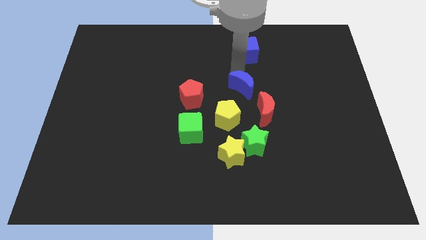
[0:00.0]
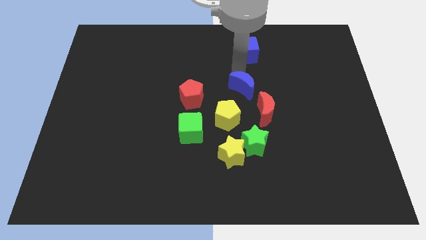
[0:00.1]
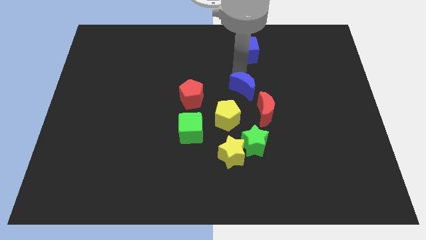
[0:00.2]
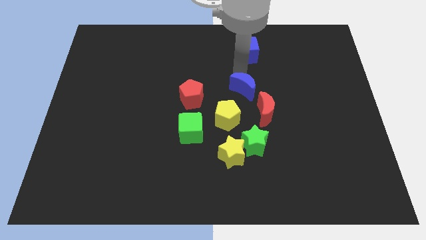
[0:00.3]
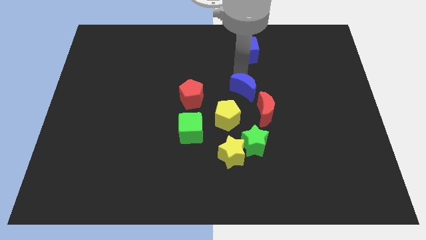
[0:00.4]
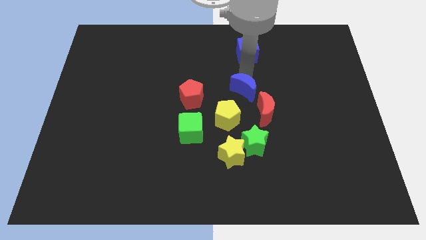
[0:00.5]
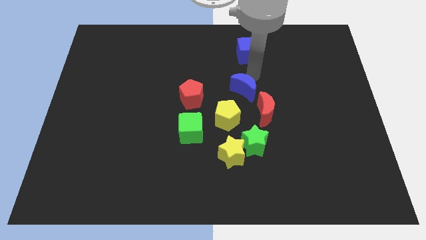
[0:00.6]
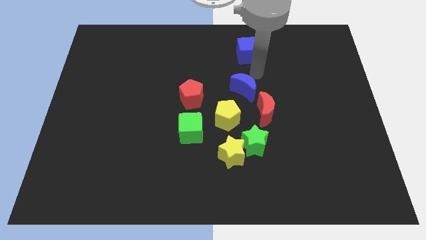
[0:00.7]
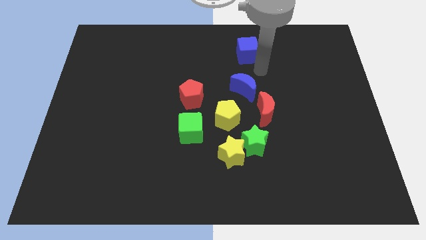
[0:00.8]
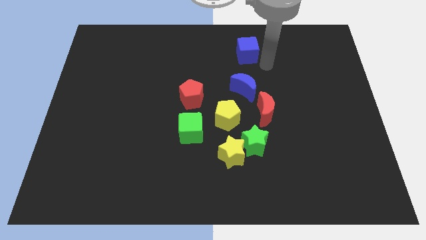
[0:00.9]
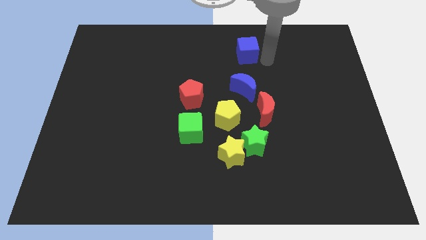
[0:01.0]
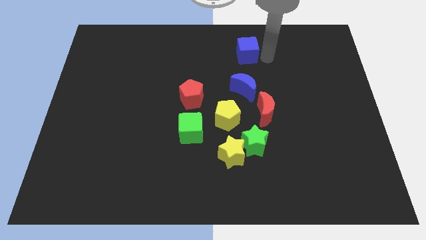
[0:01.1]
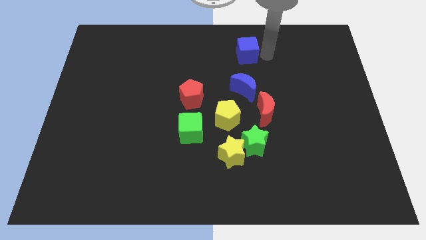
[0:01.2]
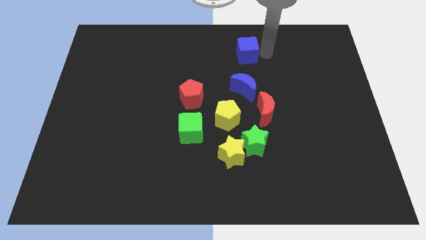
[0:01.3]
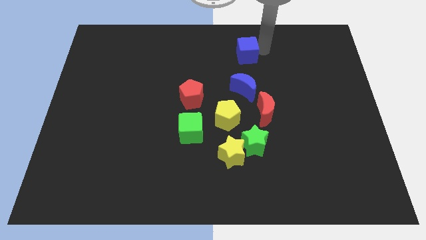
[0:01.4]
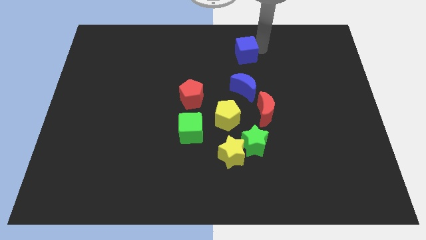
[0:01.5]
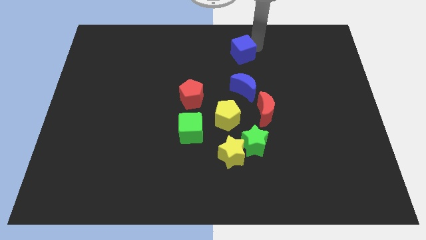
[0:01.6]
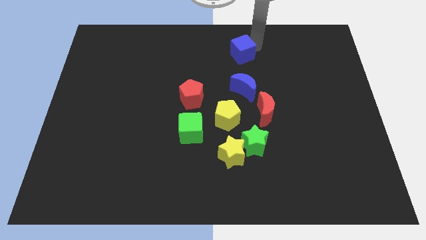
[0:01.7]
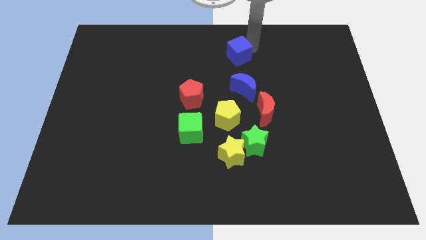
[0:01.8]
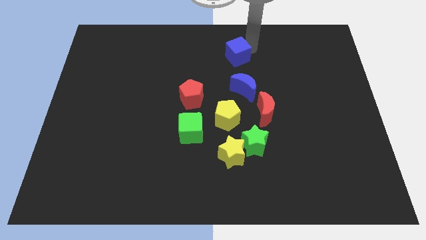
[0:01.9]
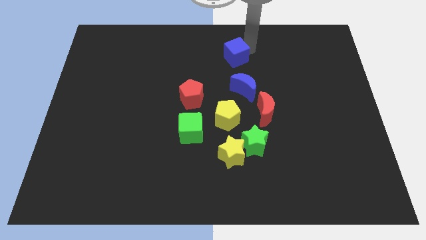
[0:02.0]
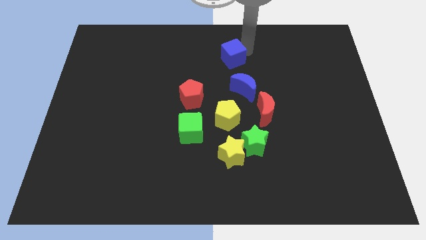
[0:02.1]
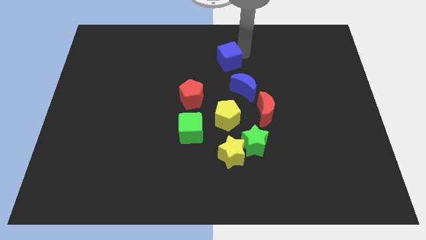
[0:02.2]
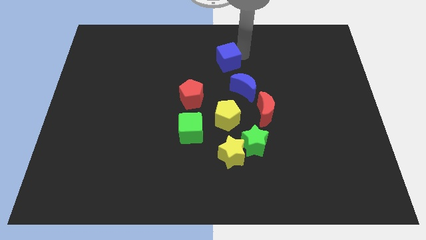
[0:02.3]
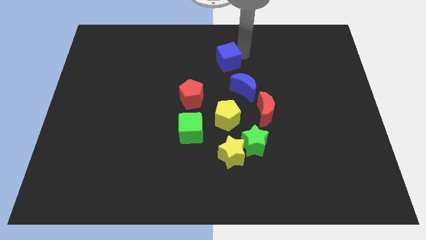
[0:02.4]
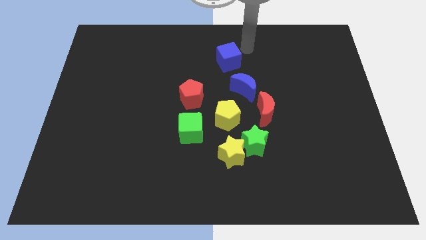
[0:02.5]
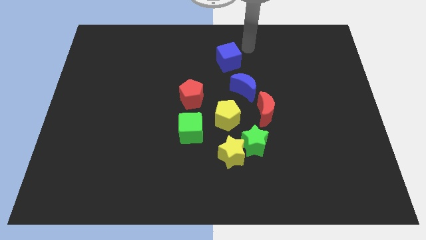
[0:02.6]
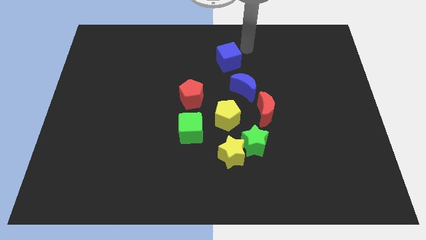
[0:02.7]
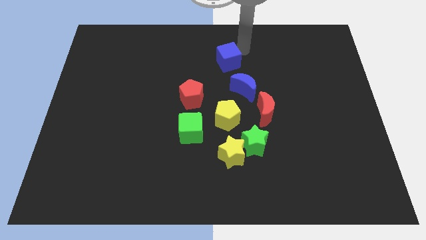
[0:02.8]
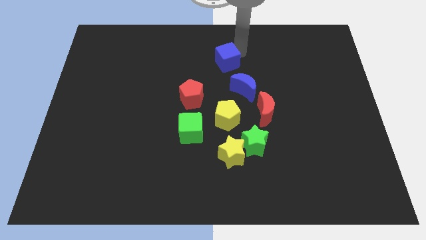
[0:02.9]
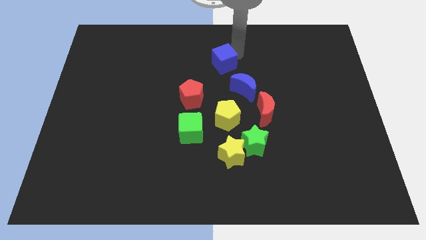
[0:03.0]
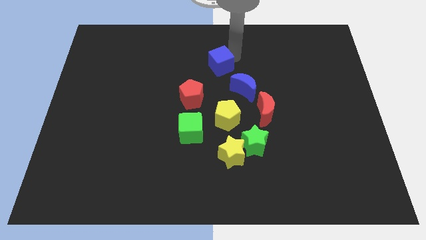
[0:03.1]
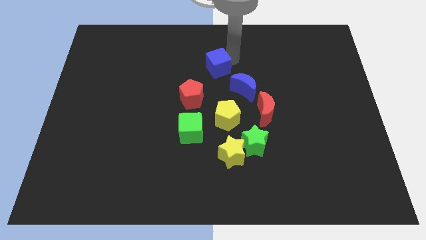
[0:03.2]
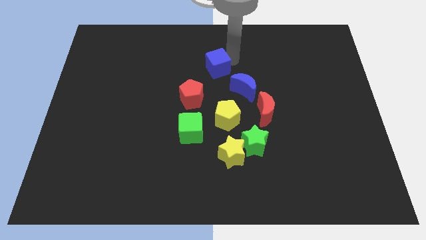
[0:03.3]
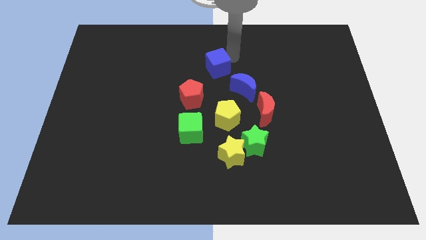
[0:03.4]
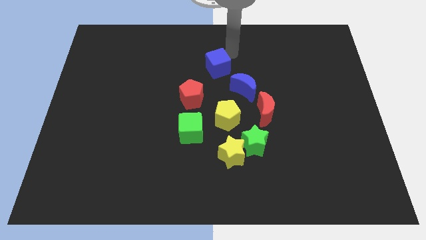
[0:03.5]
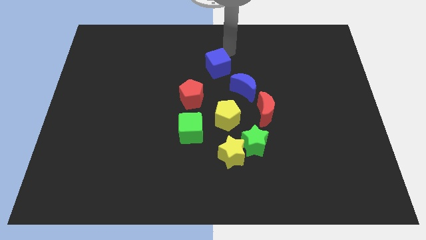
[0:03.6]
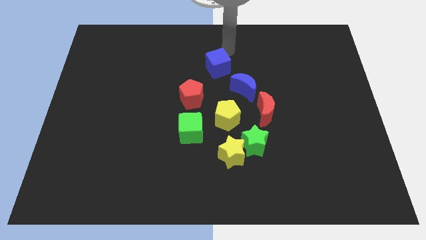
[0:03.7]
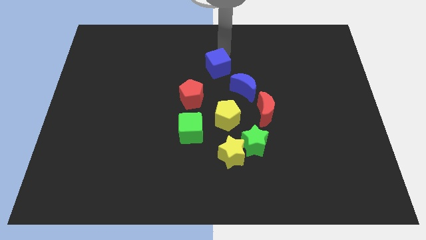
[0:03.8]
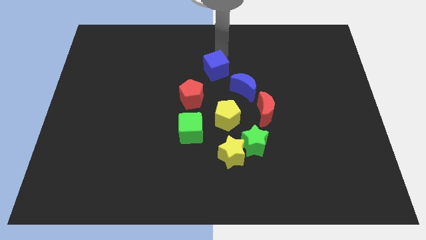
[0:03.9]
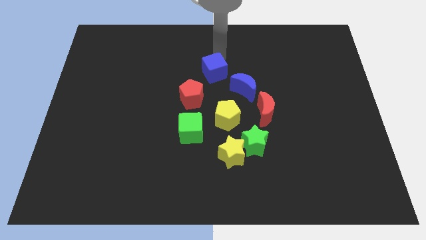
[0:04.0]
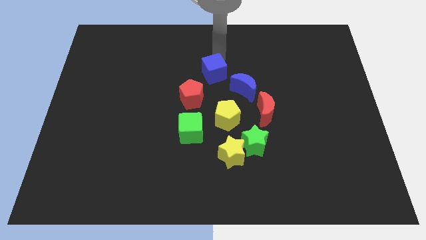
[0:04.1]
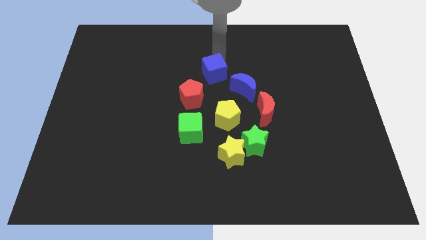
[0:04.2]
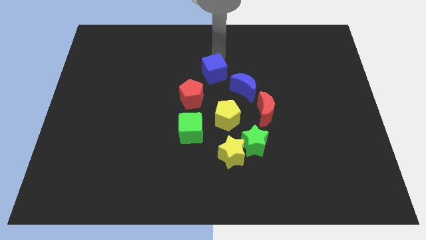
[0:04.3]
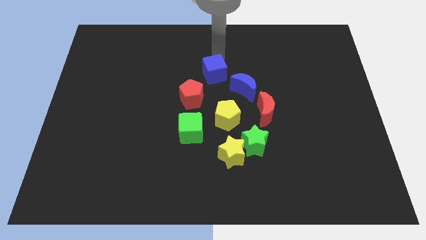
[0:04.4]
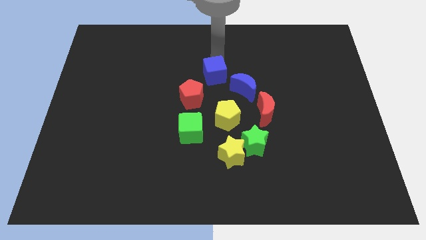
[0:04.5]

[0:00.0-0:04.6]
place blue cube parallel to yellow pentagon

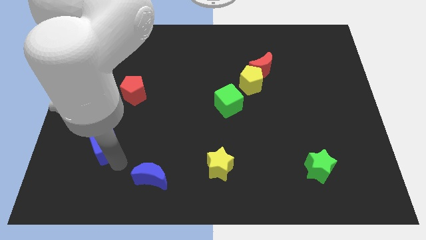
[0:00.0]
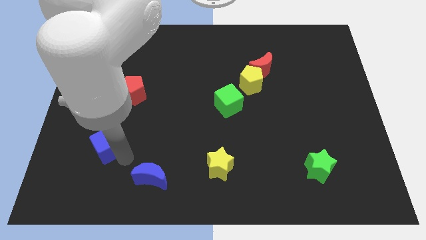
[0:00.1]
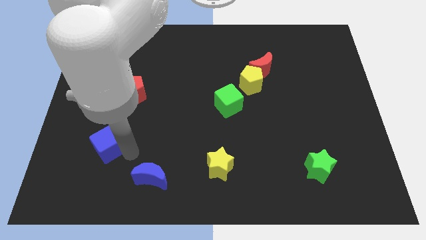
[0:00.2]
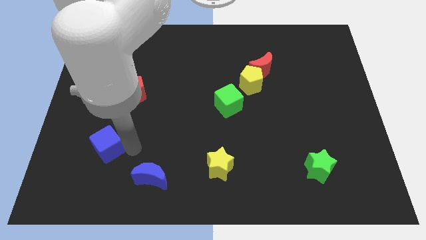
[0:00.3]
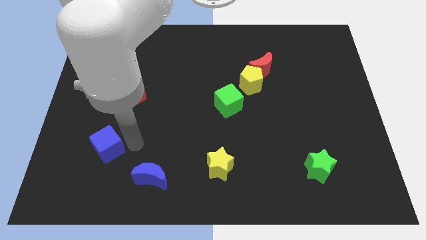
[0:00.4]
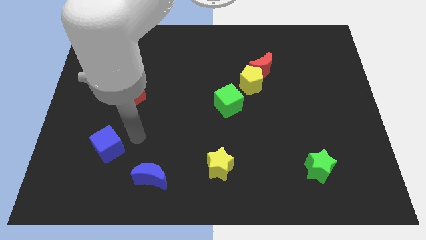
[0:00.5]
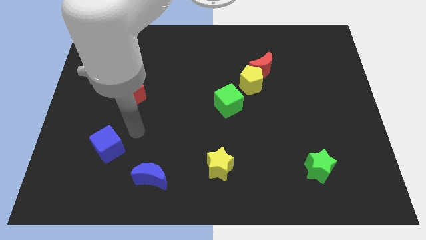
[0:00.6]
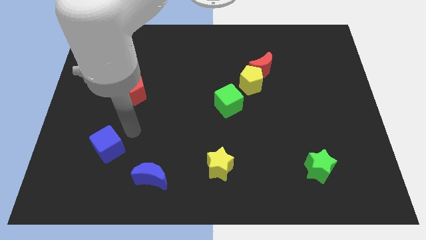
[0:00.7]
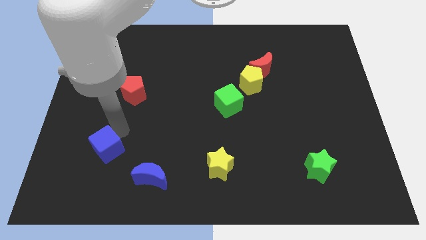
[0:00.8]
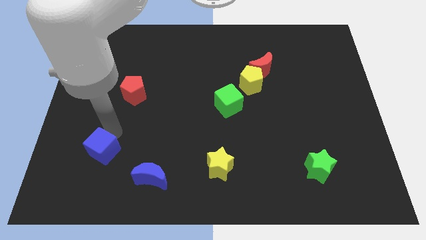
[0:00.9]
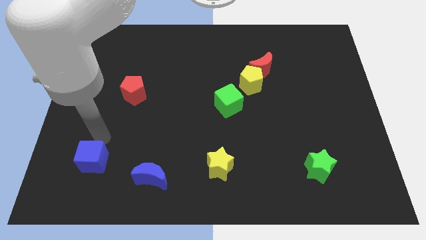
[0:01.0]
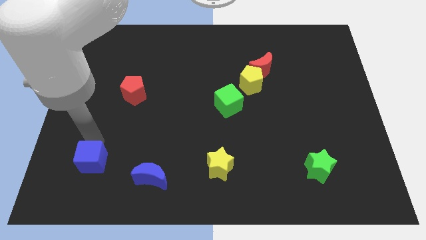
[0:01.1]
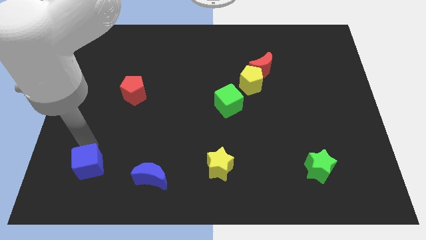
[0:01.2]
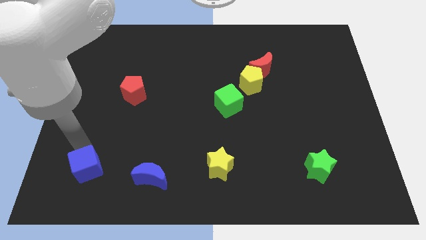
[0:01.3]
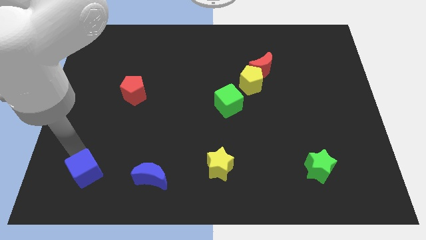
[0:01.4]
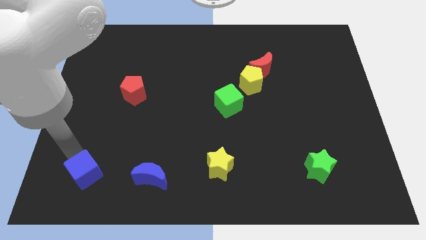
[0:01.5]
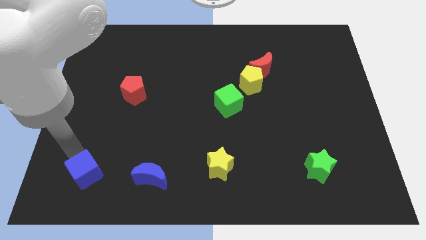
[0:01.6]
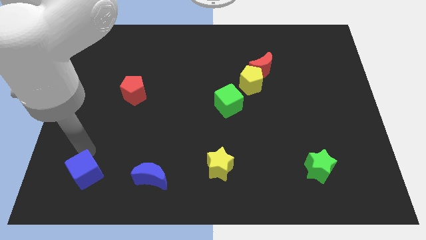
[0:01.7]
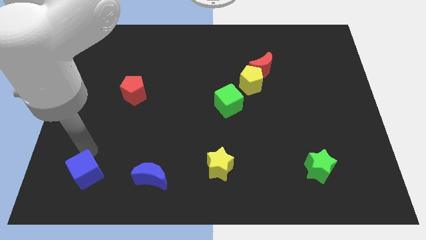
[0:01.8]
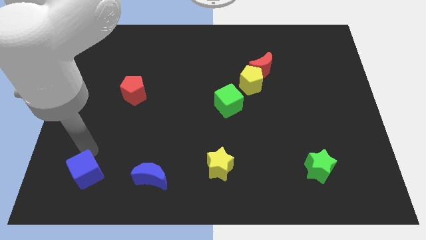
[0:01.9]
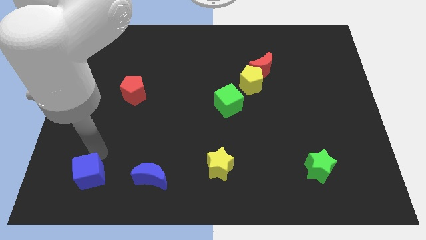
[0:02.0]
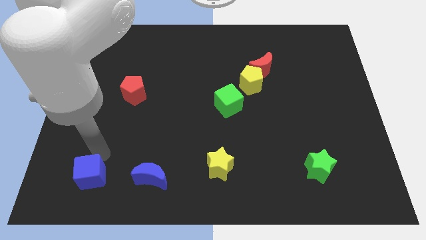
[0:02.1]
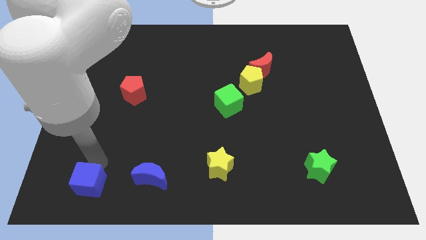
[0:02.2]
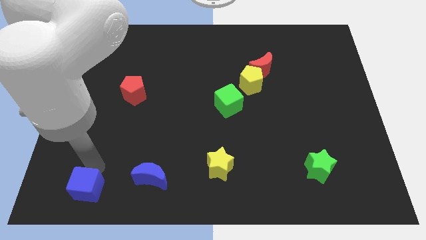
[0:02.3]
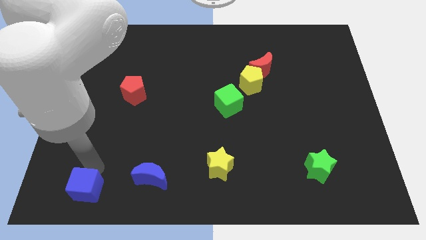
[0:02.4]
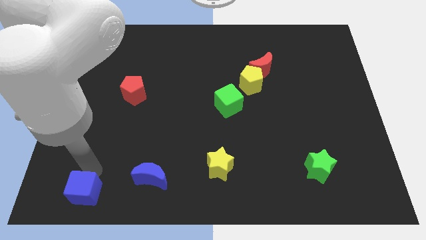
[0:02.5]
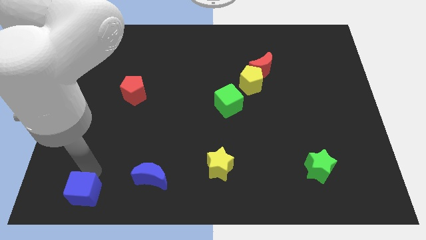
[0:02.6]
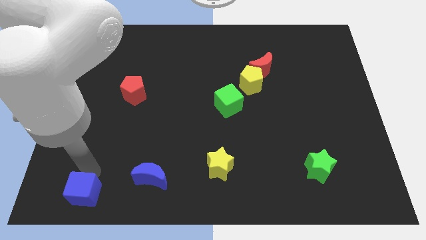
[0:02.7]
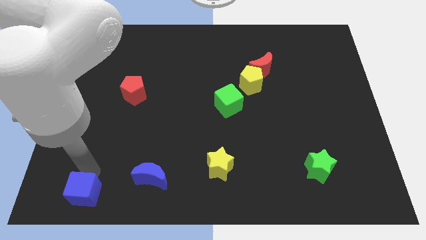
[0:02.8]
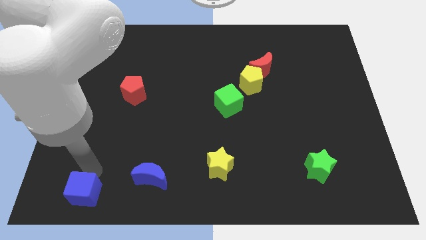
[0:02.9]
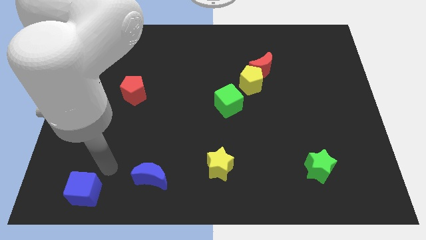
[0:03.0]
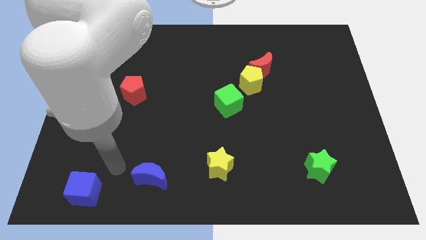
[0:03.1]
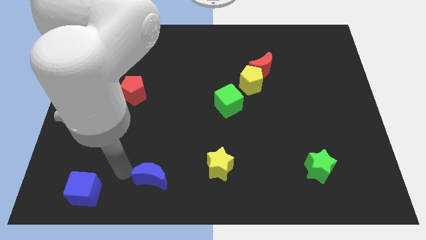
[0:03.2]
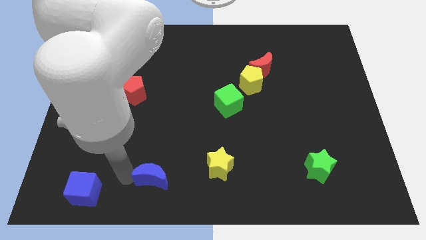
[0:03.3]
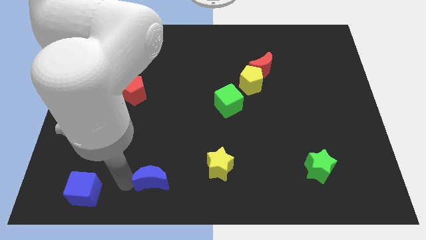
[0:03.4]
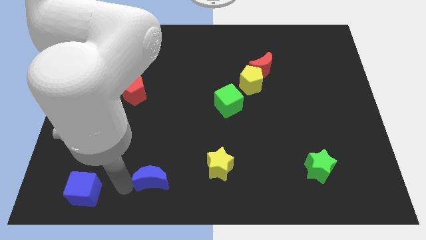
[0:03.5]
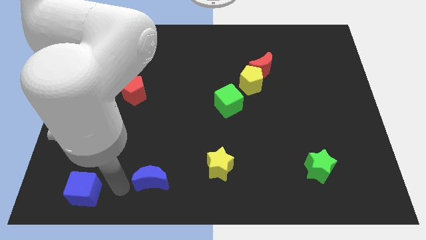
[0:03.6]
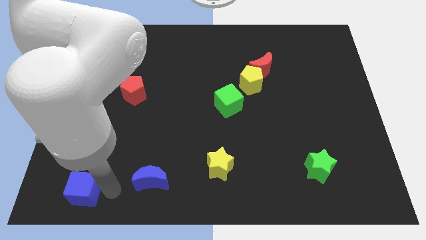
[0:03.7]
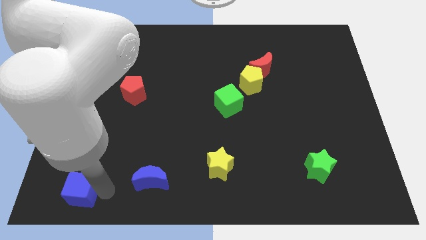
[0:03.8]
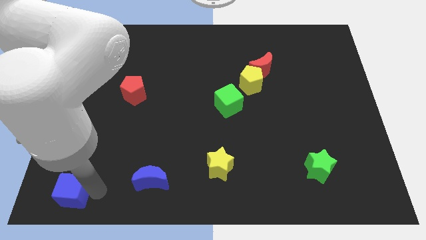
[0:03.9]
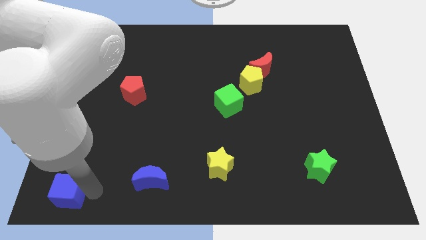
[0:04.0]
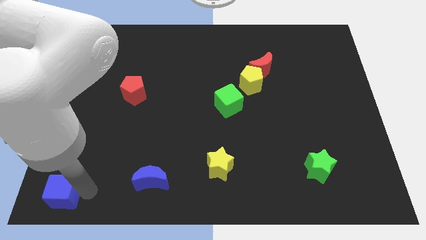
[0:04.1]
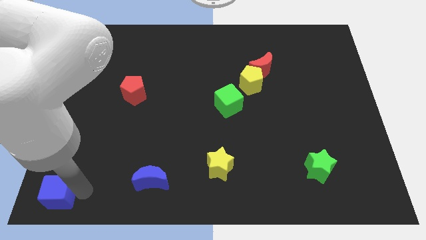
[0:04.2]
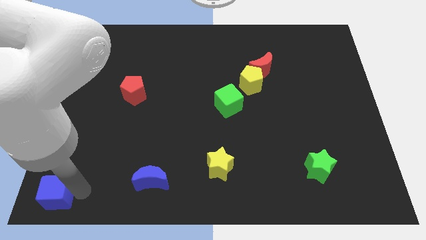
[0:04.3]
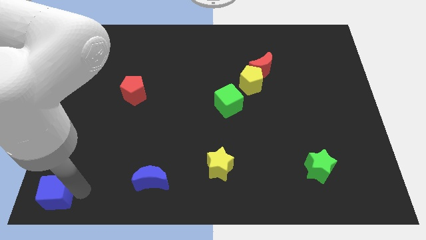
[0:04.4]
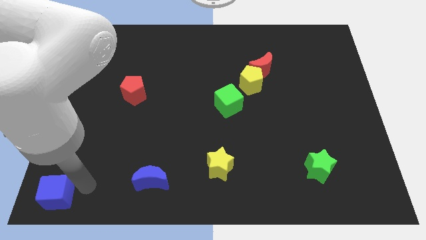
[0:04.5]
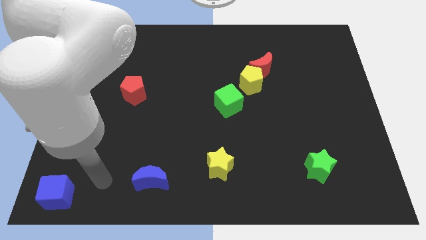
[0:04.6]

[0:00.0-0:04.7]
push the blue cube to the bottom left corner
